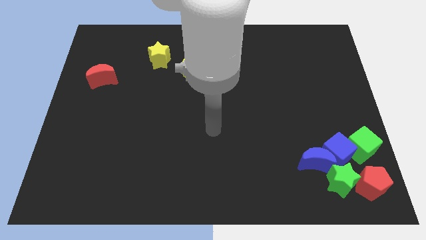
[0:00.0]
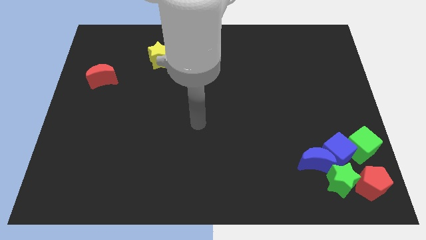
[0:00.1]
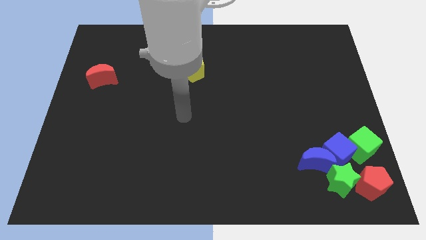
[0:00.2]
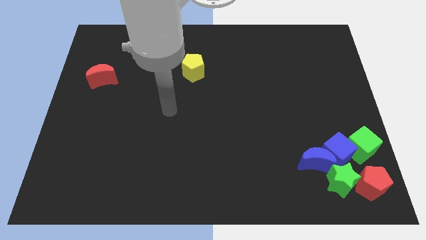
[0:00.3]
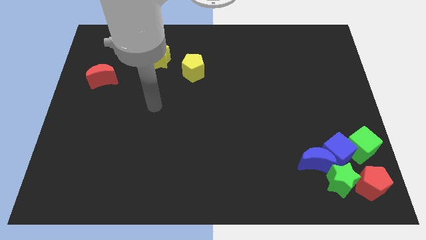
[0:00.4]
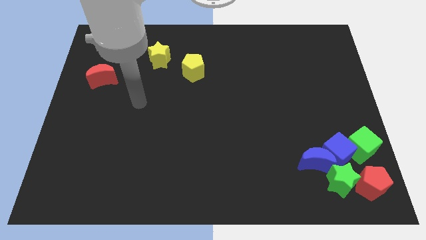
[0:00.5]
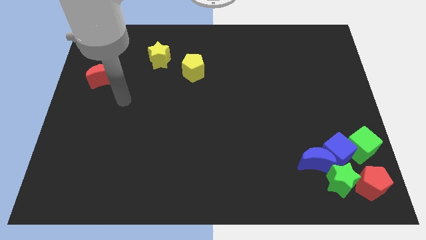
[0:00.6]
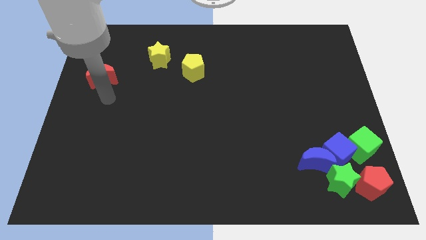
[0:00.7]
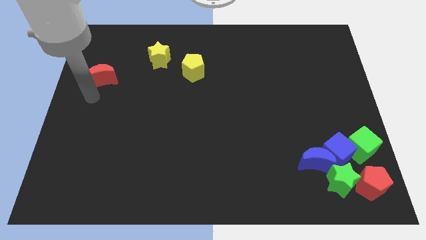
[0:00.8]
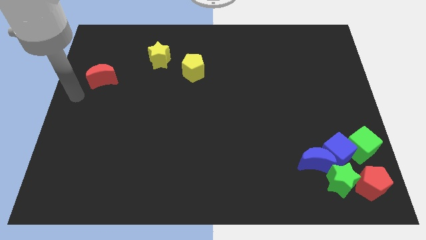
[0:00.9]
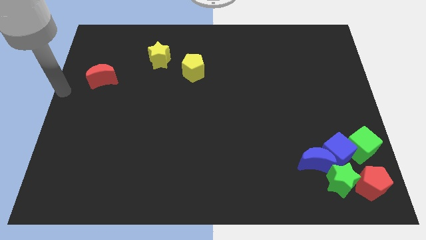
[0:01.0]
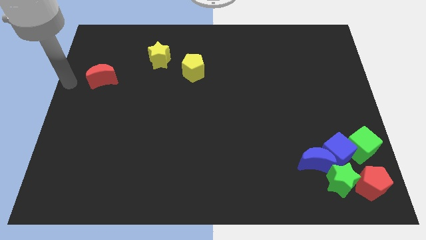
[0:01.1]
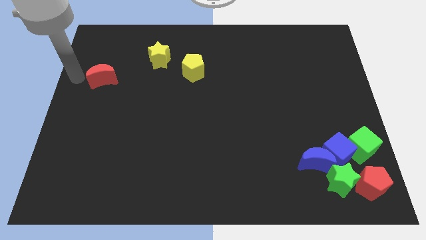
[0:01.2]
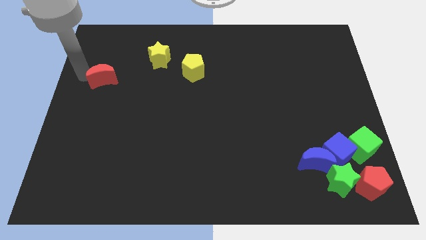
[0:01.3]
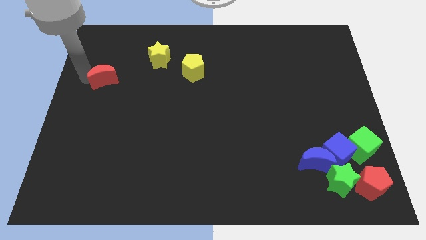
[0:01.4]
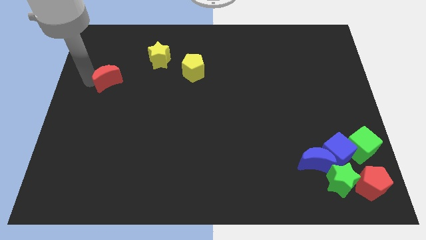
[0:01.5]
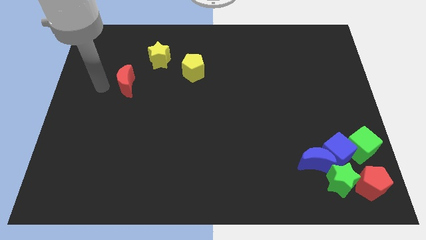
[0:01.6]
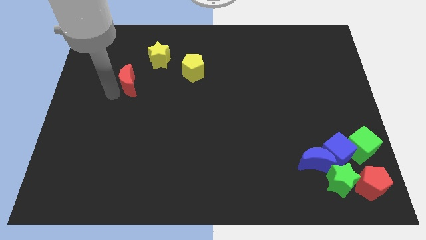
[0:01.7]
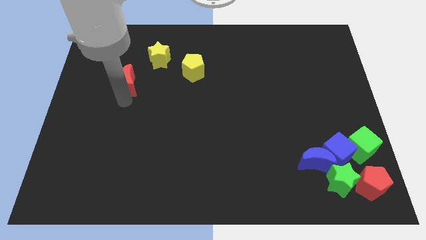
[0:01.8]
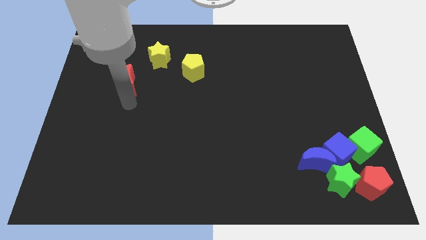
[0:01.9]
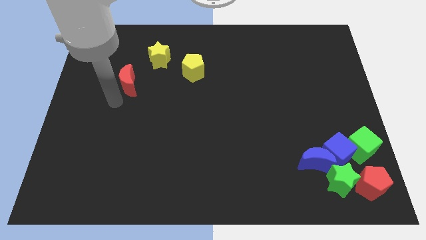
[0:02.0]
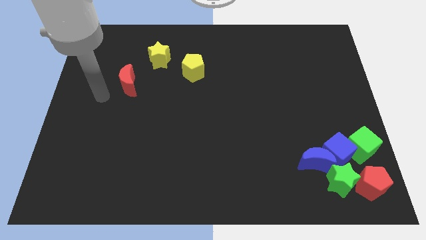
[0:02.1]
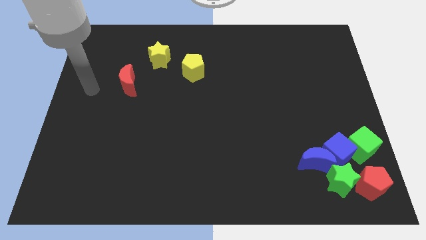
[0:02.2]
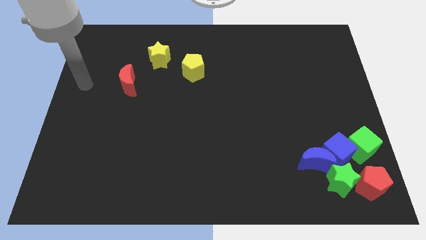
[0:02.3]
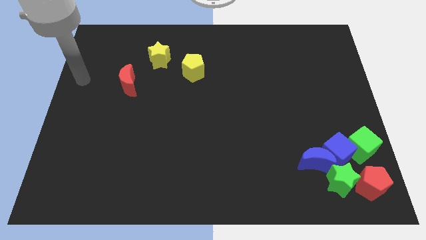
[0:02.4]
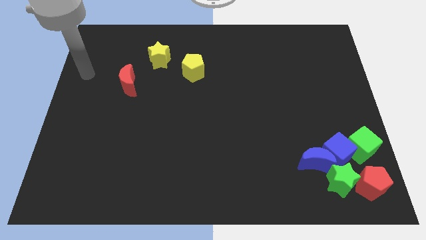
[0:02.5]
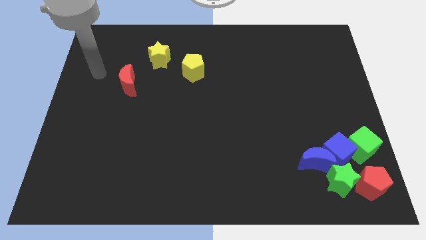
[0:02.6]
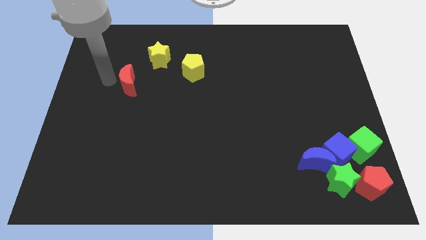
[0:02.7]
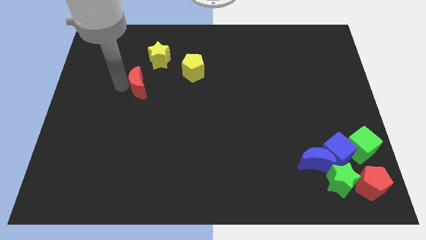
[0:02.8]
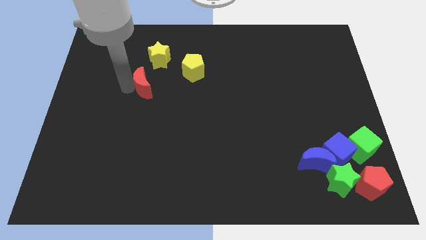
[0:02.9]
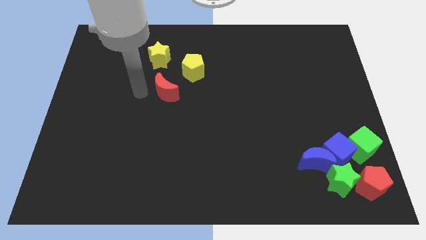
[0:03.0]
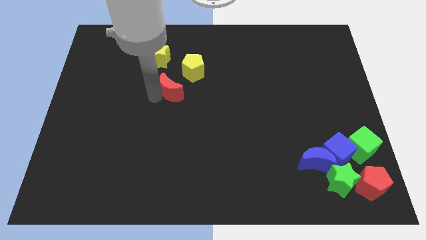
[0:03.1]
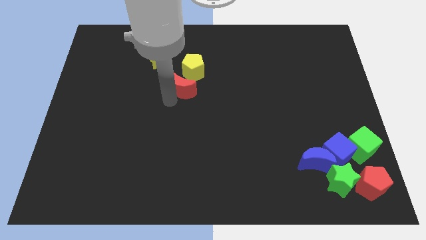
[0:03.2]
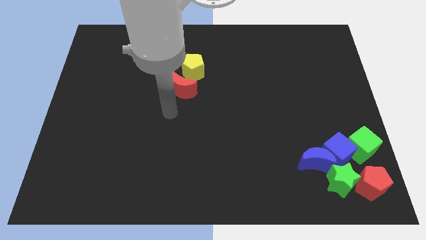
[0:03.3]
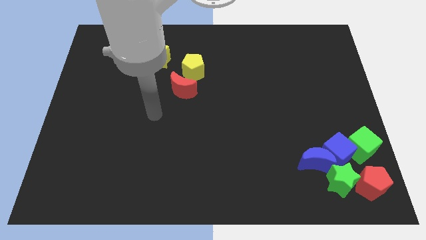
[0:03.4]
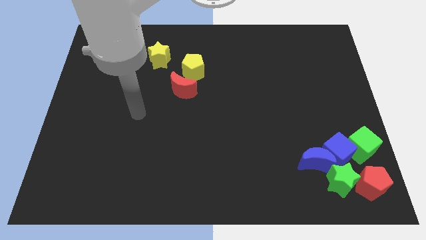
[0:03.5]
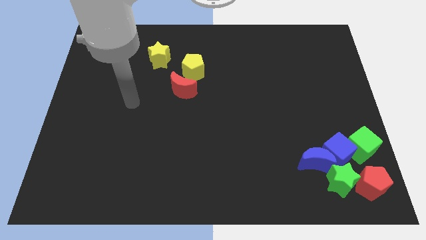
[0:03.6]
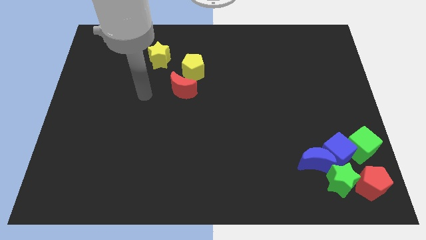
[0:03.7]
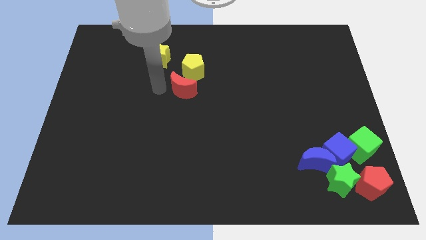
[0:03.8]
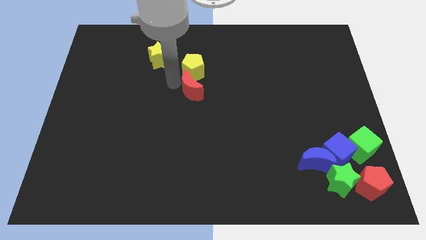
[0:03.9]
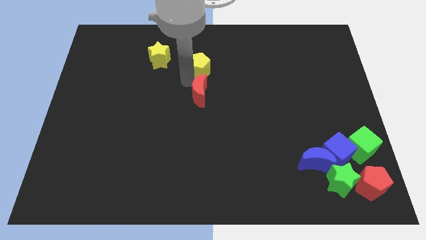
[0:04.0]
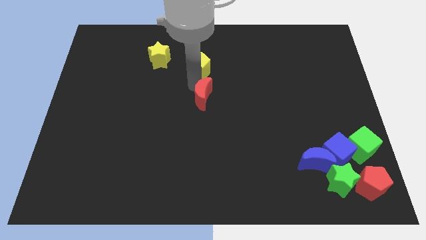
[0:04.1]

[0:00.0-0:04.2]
place the red moon below yellow pentagon

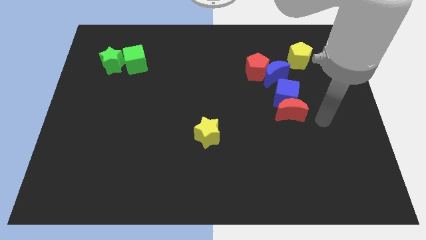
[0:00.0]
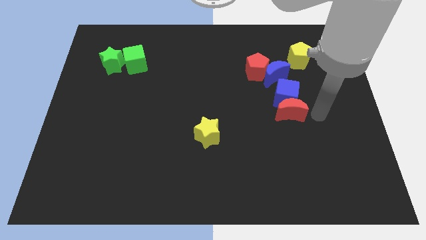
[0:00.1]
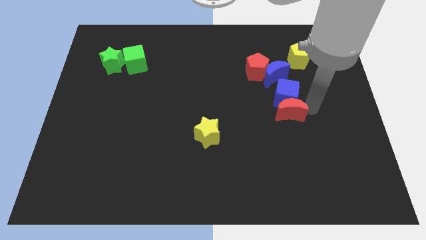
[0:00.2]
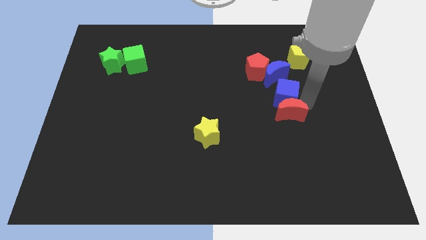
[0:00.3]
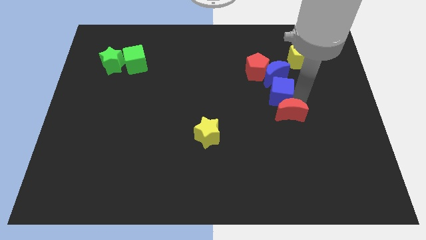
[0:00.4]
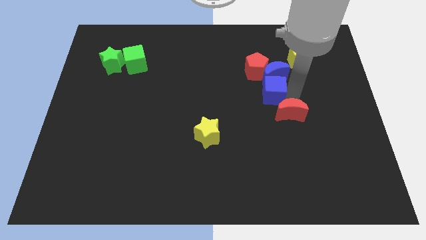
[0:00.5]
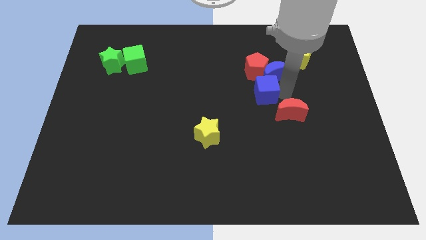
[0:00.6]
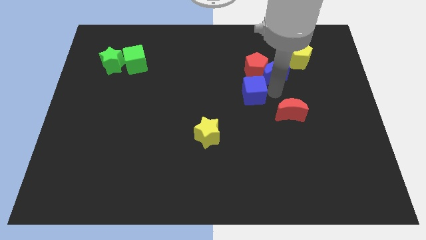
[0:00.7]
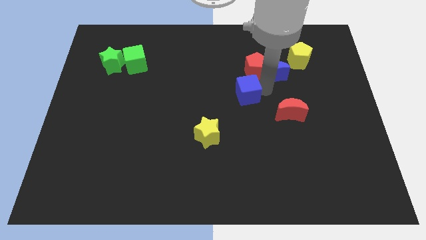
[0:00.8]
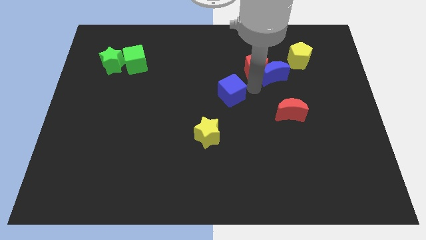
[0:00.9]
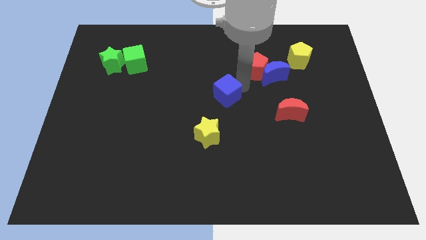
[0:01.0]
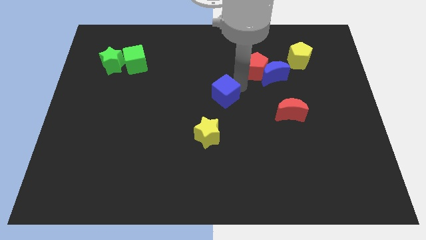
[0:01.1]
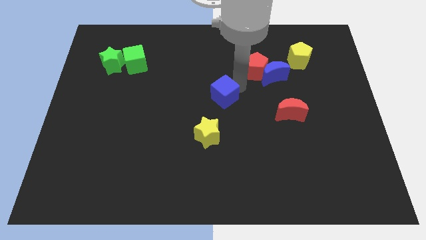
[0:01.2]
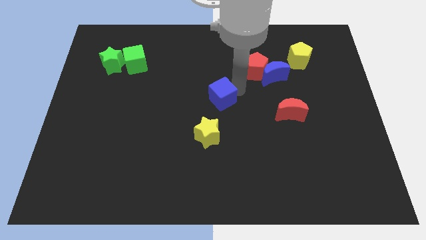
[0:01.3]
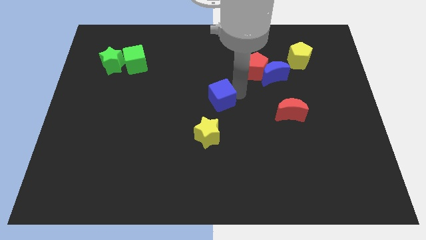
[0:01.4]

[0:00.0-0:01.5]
move the blue cube to the center of the board

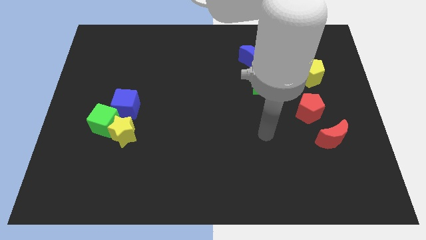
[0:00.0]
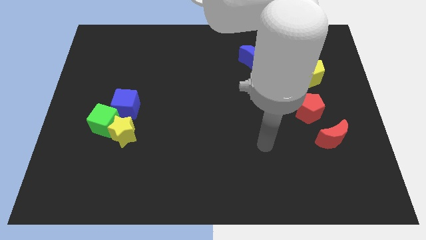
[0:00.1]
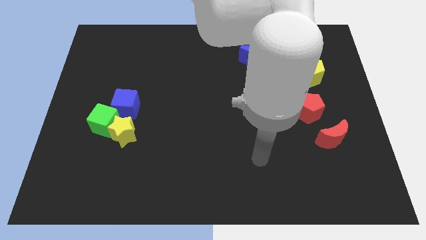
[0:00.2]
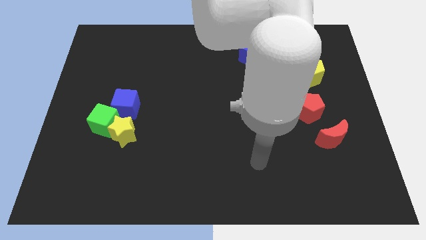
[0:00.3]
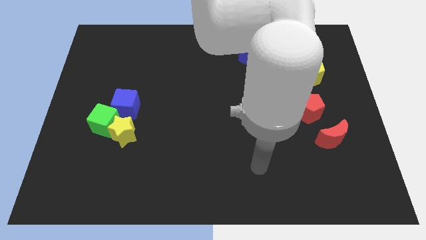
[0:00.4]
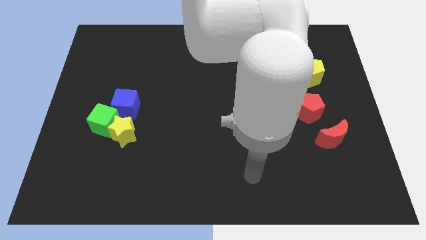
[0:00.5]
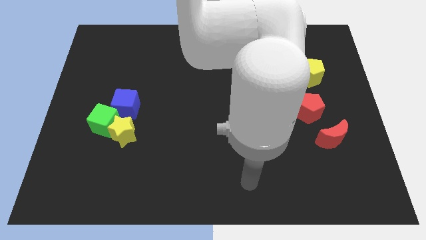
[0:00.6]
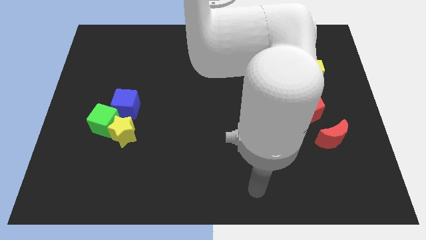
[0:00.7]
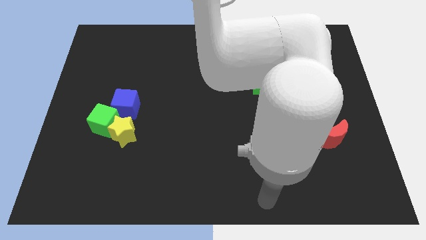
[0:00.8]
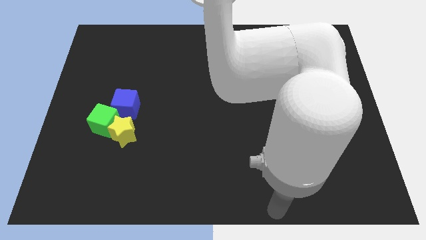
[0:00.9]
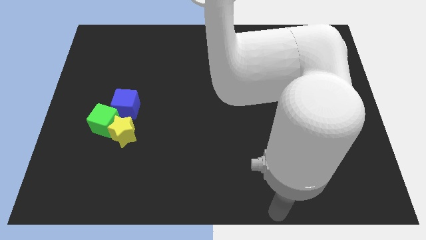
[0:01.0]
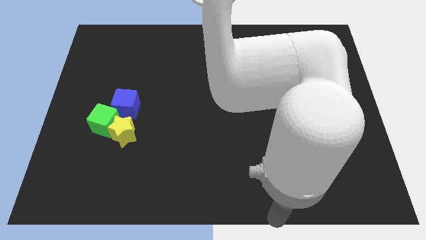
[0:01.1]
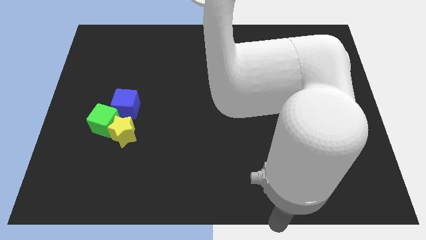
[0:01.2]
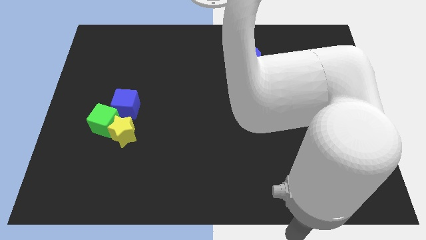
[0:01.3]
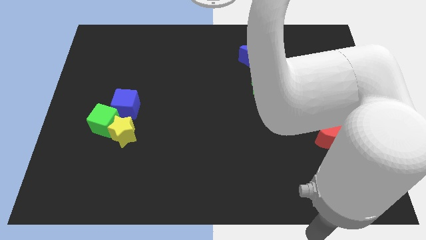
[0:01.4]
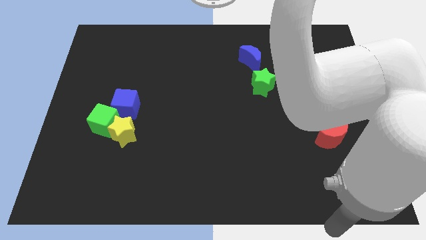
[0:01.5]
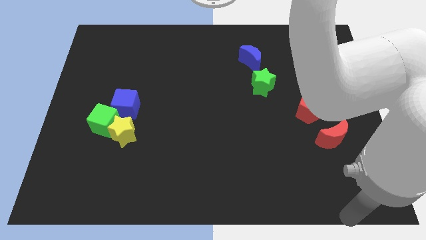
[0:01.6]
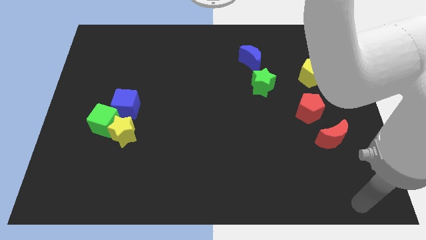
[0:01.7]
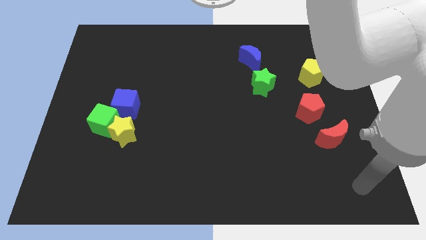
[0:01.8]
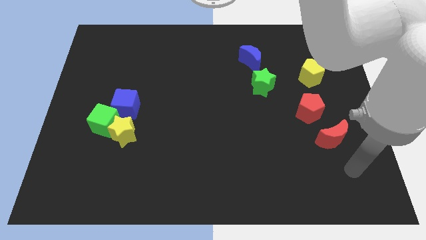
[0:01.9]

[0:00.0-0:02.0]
move your arm towards the red crescent

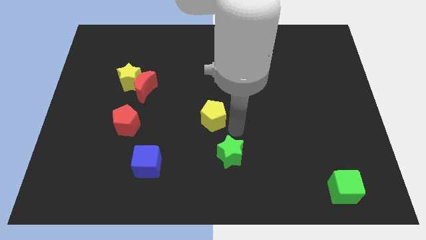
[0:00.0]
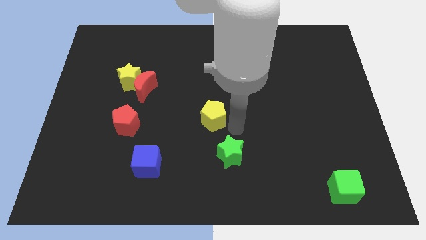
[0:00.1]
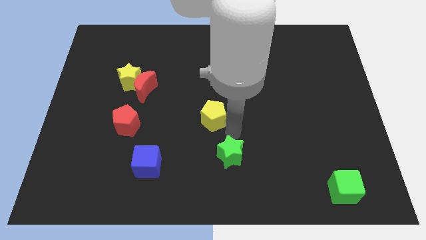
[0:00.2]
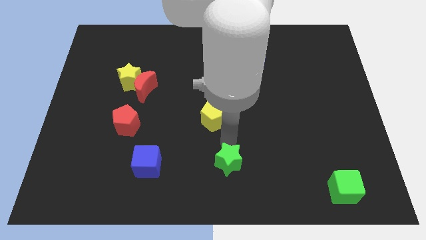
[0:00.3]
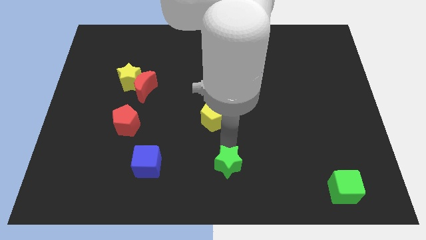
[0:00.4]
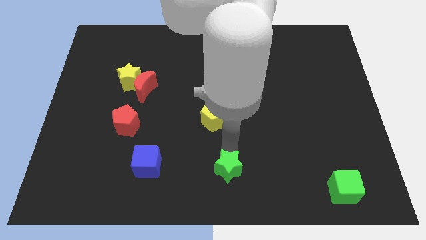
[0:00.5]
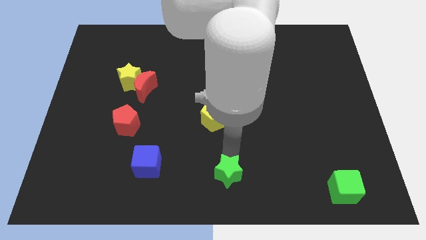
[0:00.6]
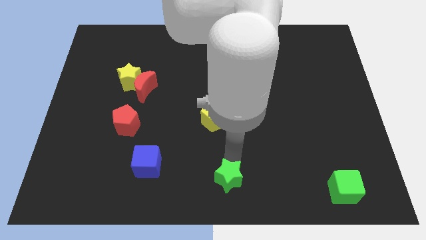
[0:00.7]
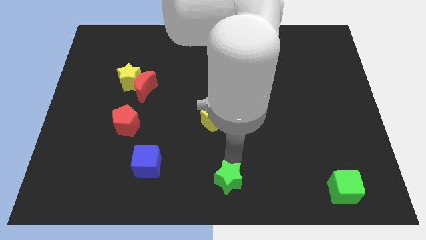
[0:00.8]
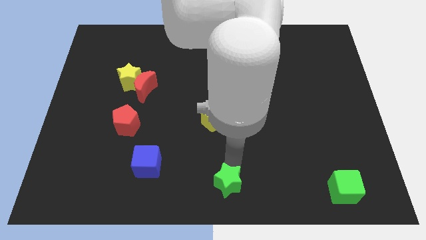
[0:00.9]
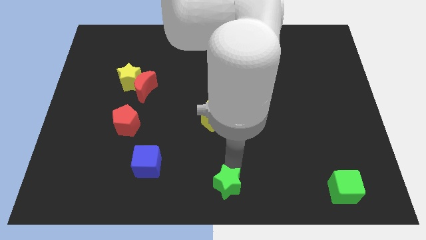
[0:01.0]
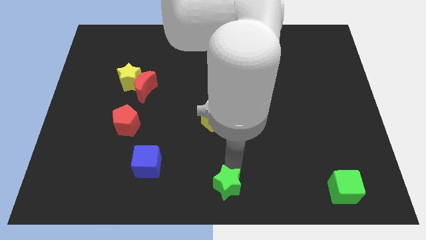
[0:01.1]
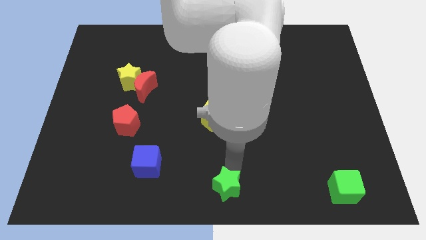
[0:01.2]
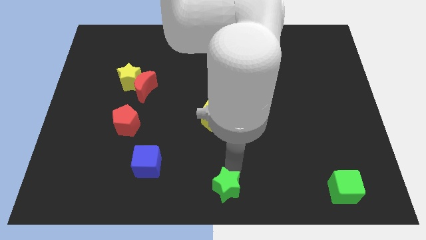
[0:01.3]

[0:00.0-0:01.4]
place green start at bottom
